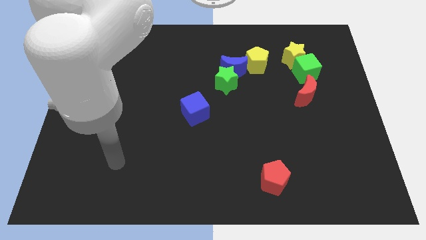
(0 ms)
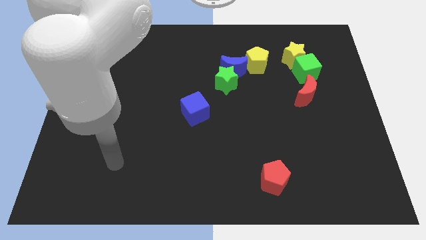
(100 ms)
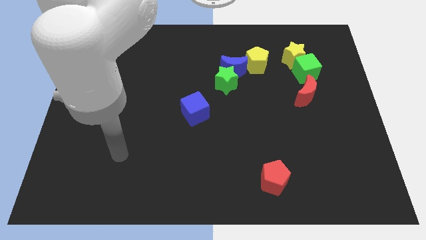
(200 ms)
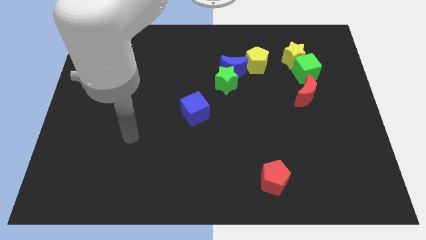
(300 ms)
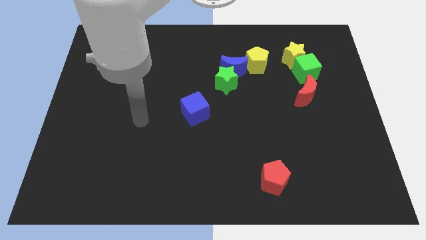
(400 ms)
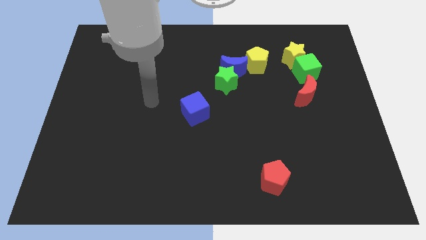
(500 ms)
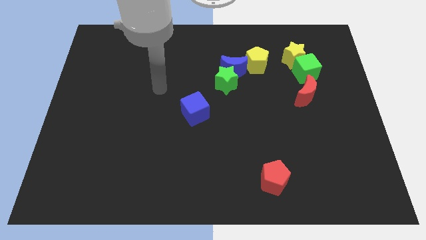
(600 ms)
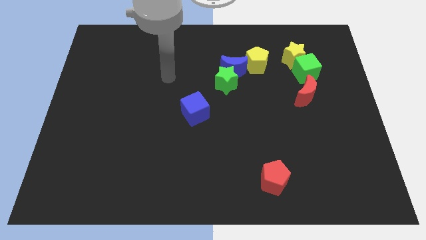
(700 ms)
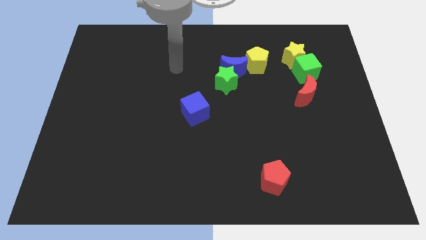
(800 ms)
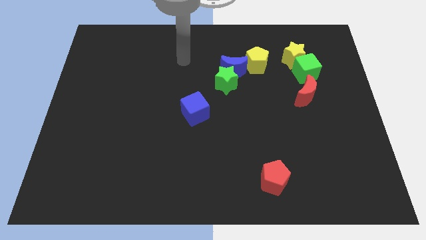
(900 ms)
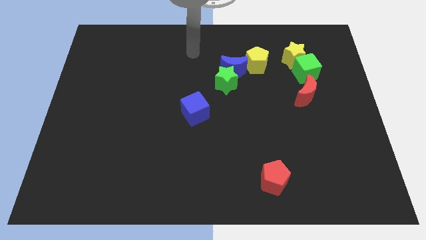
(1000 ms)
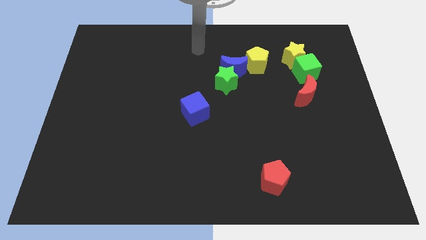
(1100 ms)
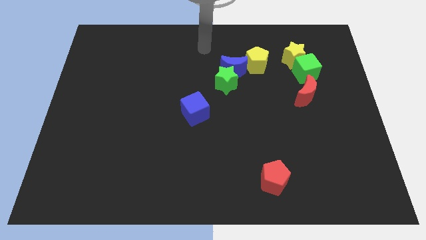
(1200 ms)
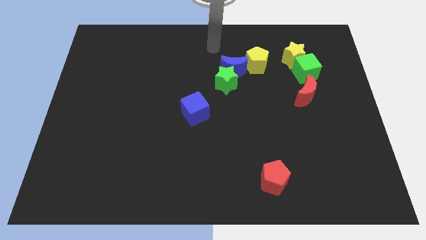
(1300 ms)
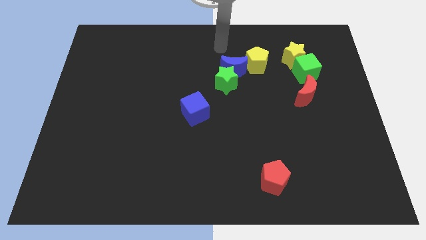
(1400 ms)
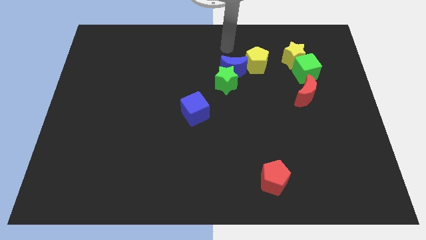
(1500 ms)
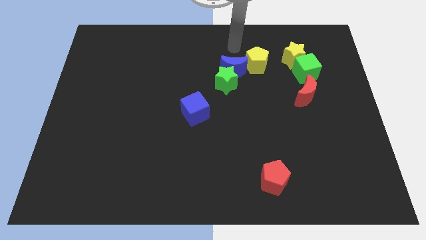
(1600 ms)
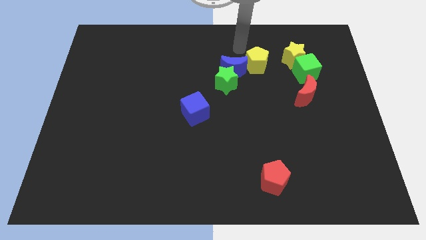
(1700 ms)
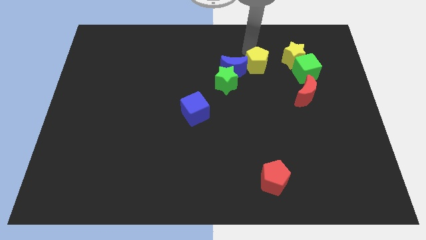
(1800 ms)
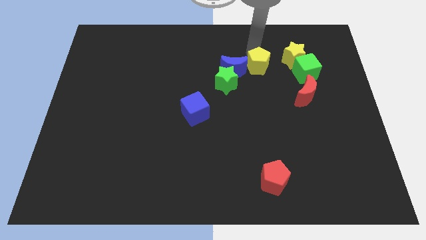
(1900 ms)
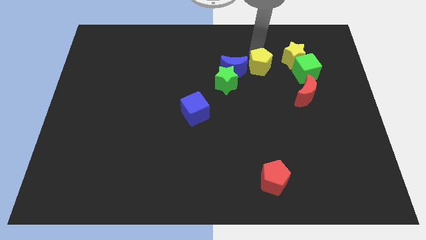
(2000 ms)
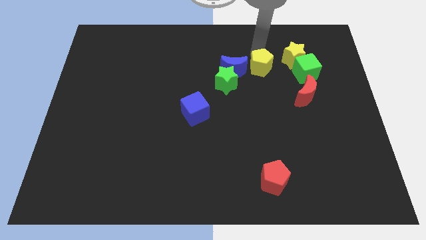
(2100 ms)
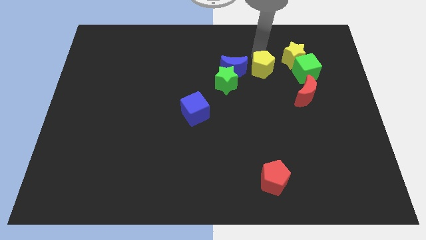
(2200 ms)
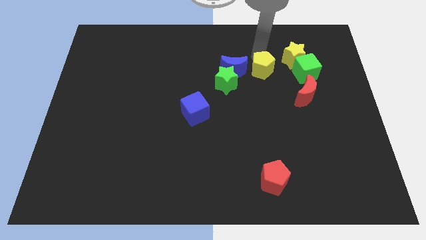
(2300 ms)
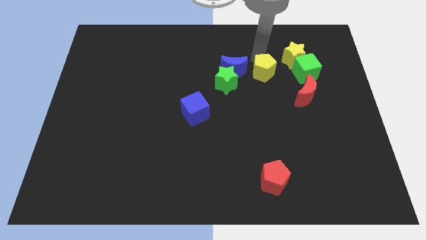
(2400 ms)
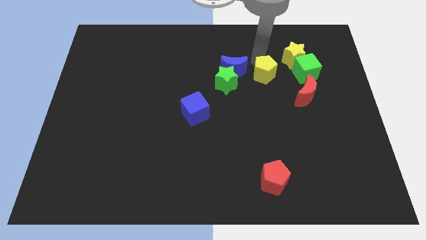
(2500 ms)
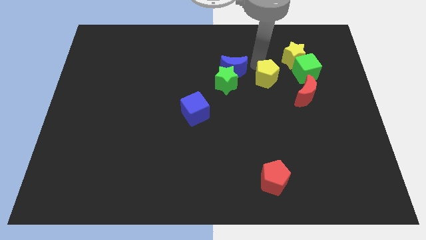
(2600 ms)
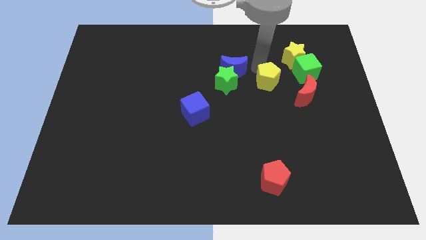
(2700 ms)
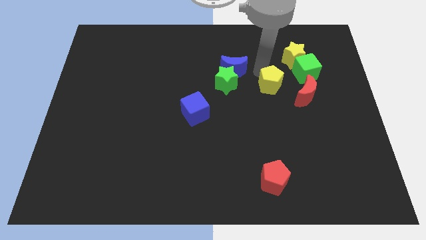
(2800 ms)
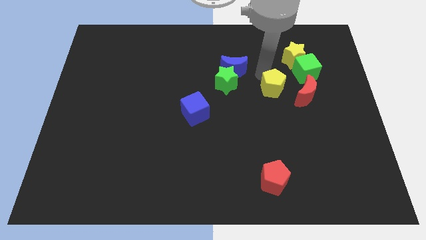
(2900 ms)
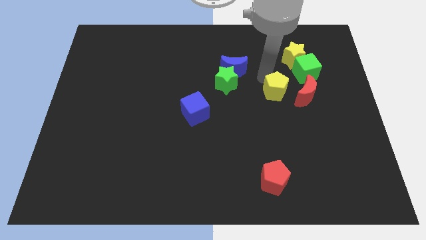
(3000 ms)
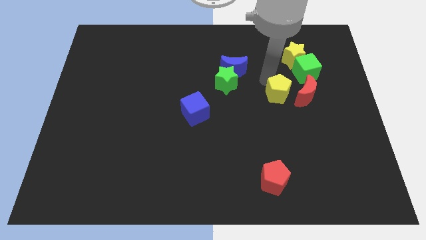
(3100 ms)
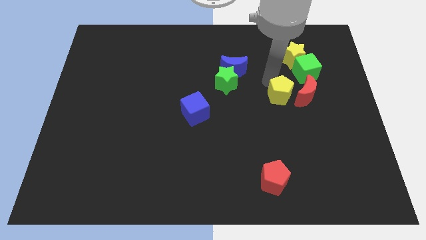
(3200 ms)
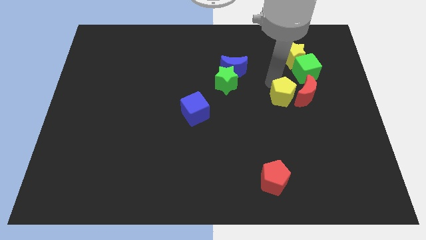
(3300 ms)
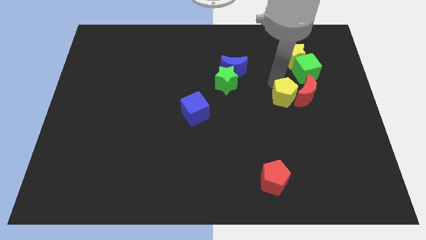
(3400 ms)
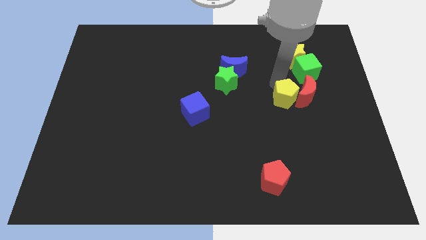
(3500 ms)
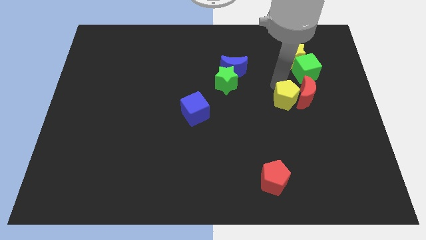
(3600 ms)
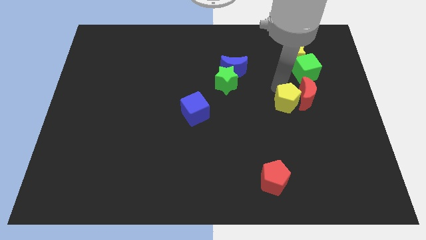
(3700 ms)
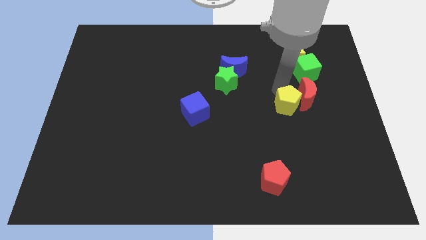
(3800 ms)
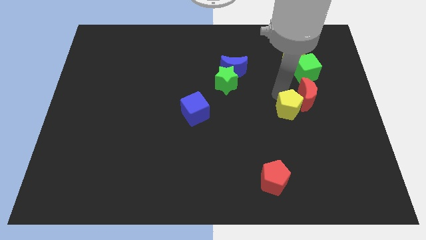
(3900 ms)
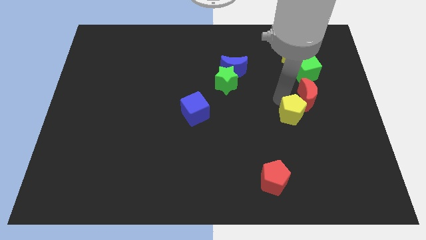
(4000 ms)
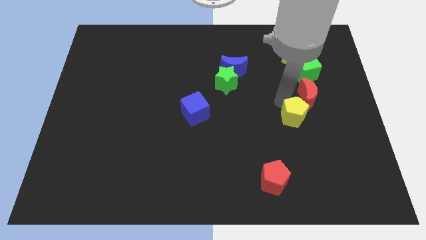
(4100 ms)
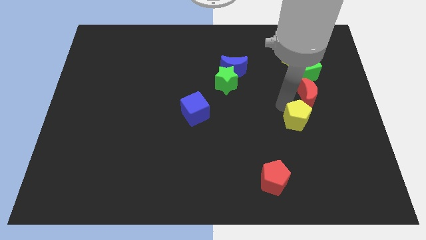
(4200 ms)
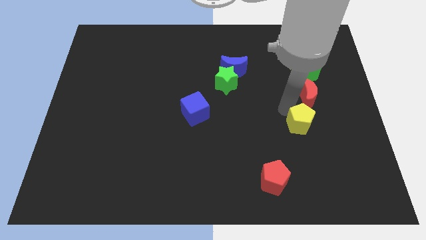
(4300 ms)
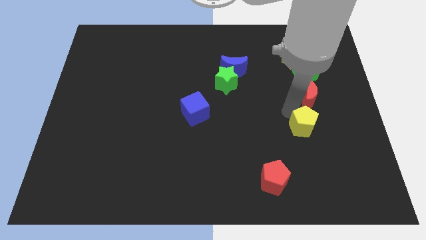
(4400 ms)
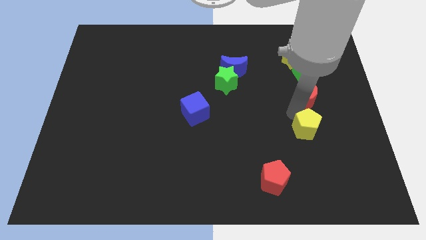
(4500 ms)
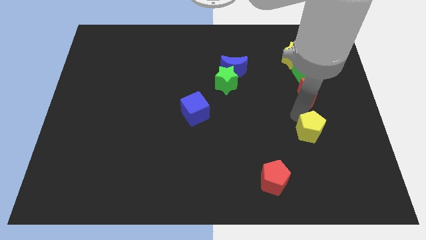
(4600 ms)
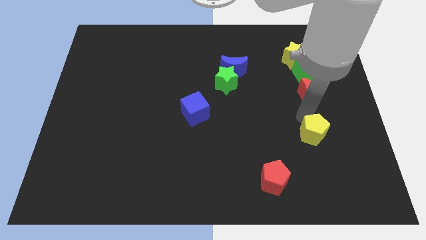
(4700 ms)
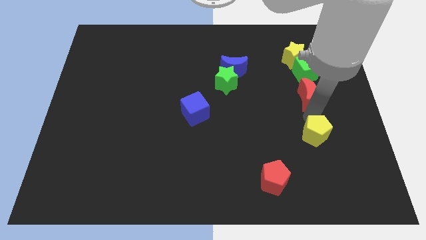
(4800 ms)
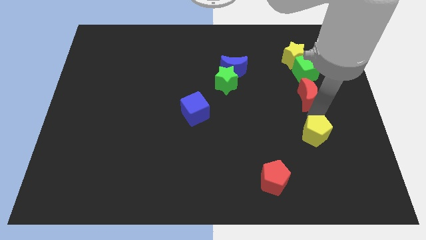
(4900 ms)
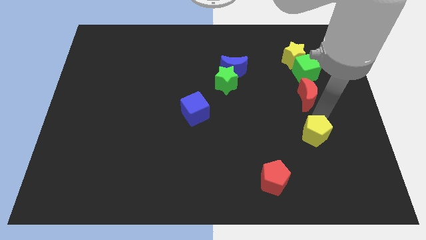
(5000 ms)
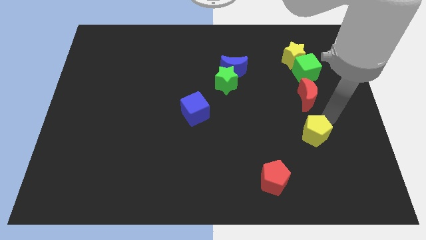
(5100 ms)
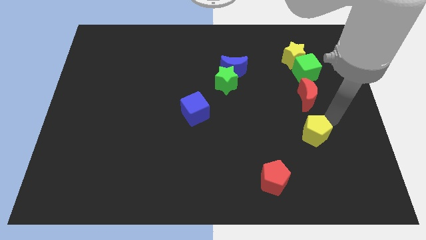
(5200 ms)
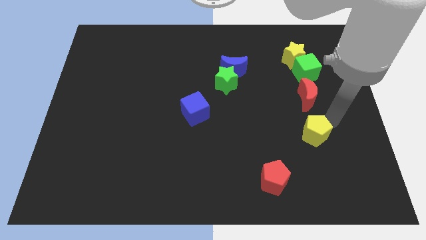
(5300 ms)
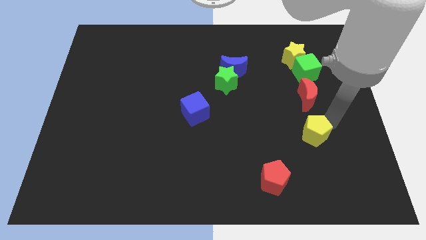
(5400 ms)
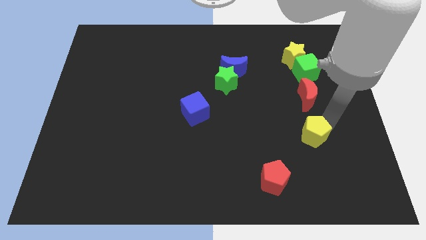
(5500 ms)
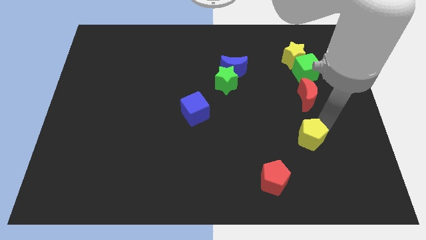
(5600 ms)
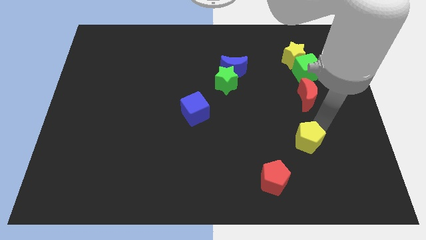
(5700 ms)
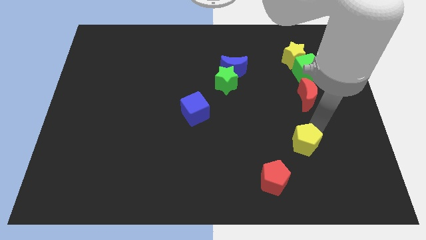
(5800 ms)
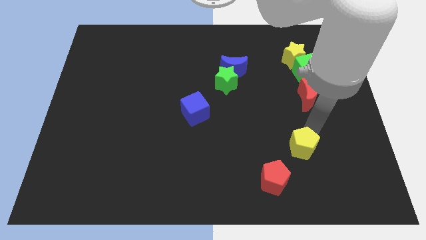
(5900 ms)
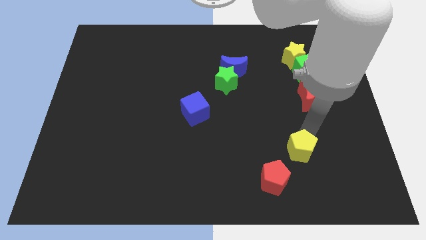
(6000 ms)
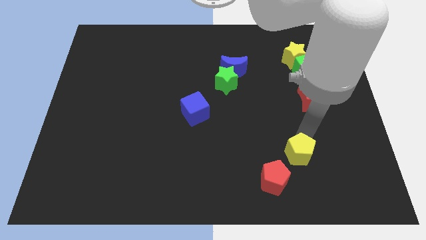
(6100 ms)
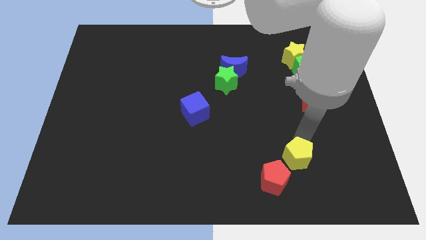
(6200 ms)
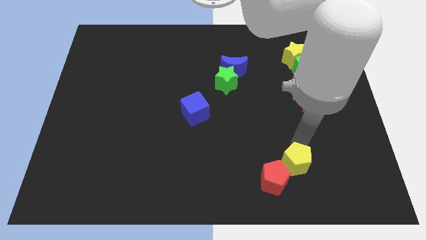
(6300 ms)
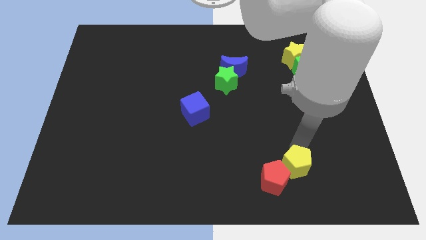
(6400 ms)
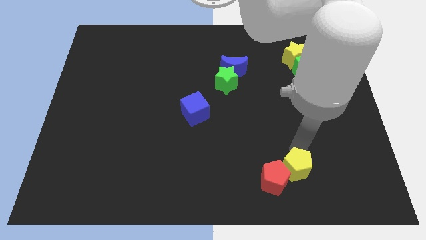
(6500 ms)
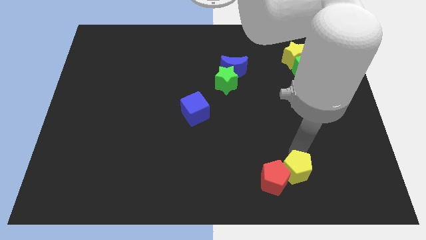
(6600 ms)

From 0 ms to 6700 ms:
put the yellow pentagon to the red pentagon

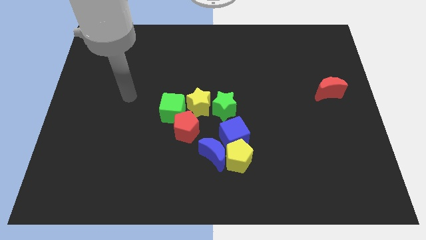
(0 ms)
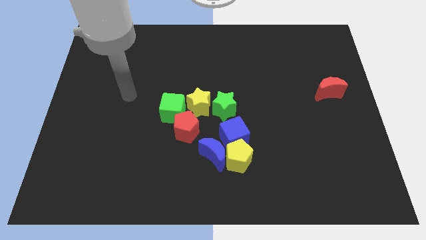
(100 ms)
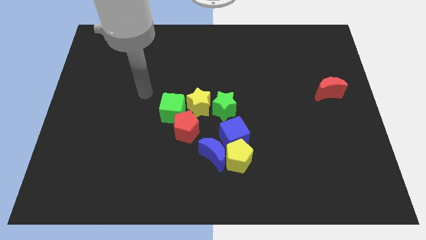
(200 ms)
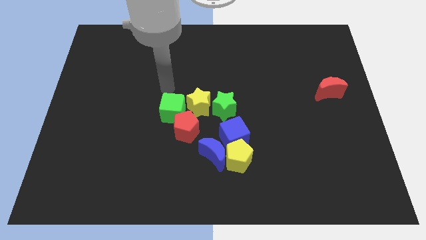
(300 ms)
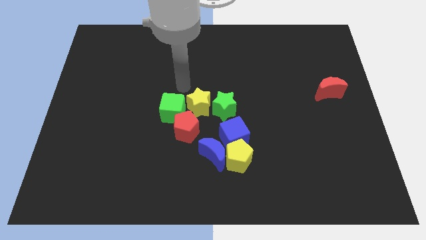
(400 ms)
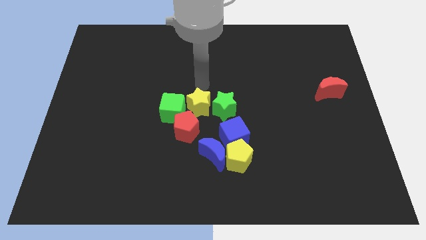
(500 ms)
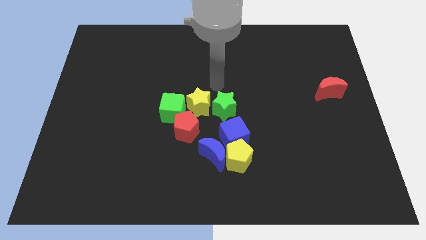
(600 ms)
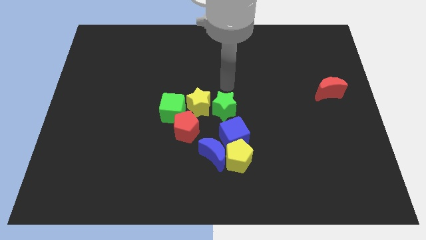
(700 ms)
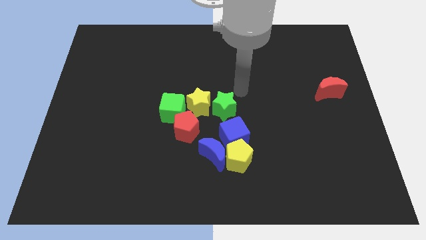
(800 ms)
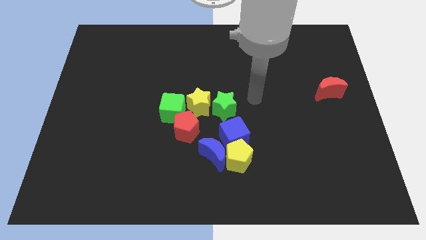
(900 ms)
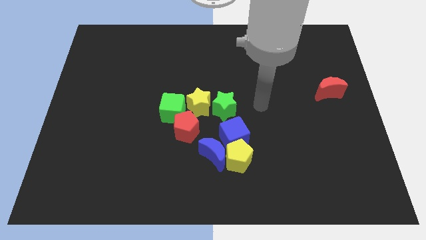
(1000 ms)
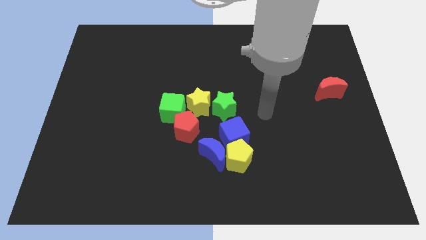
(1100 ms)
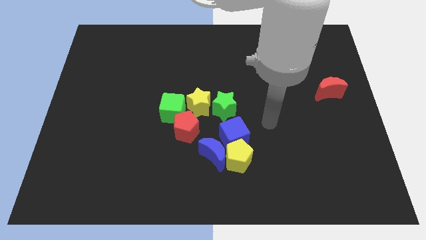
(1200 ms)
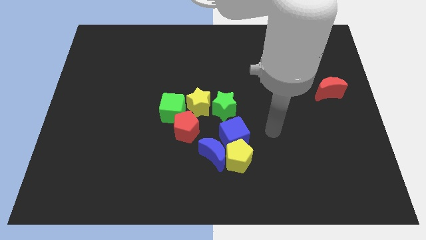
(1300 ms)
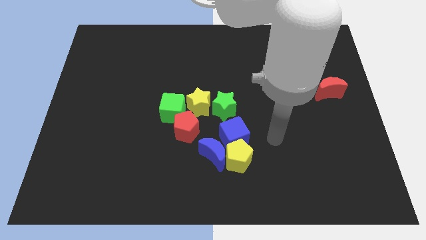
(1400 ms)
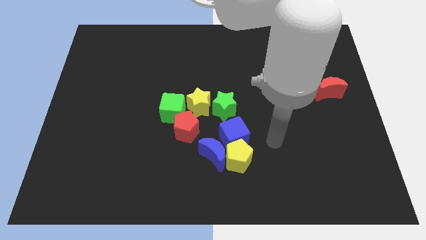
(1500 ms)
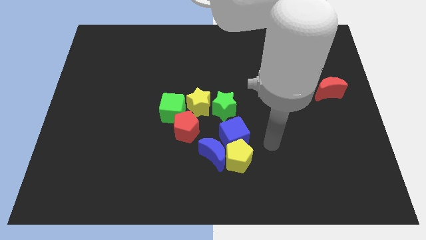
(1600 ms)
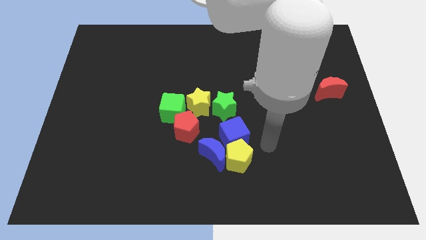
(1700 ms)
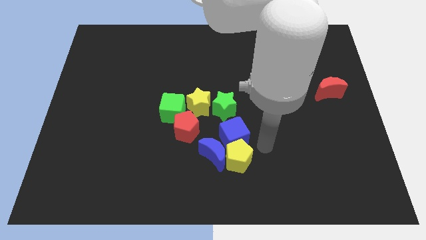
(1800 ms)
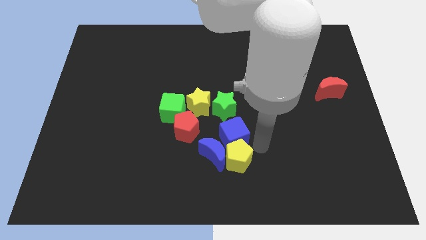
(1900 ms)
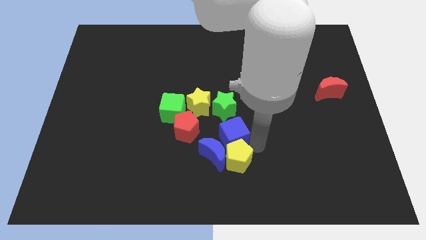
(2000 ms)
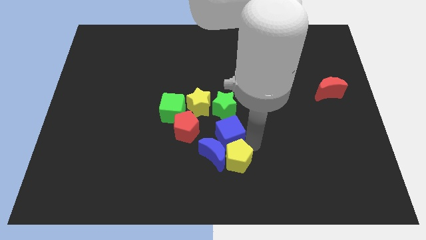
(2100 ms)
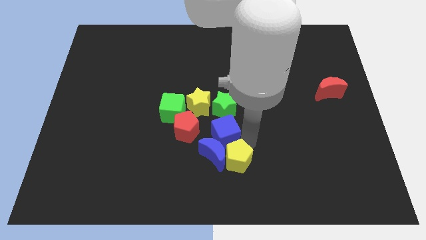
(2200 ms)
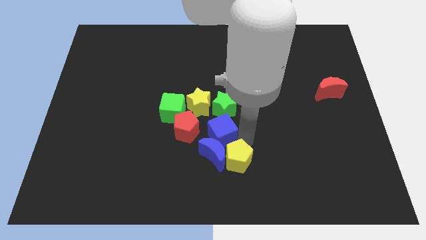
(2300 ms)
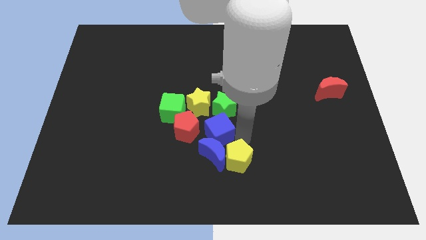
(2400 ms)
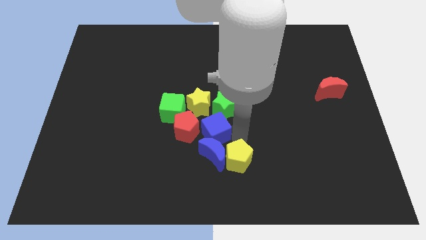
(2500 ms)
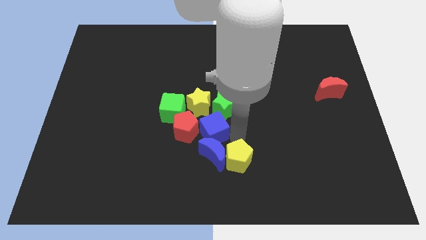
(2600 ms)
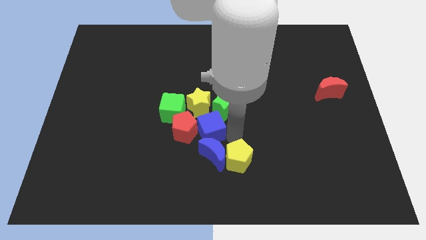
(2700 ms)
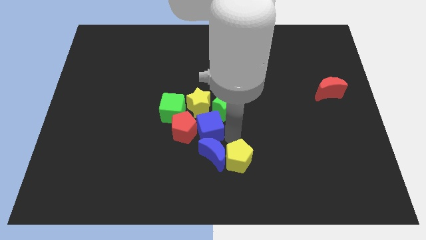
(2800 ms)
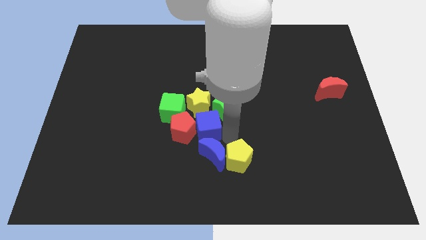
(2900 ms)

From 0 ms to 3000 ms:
slide the blue cube to the red pentagon
